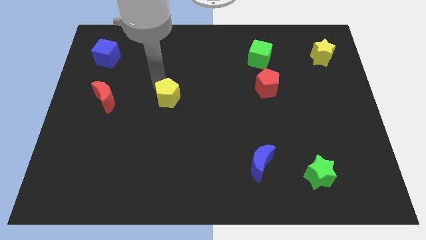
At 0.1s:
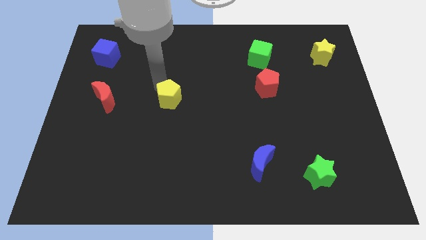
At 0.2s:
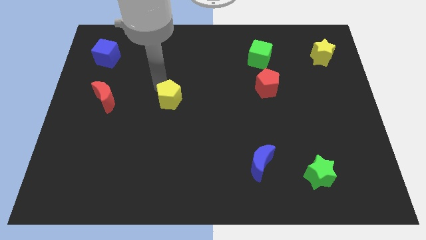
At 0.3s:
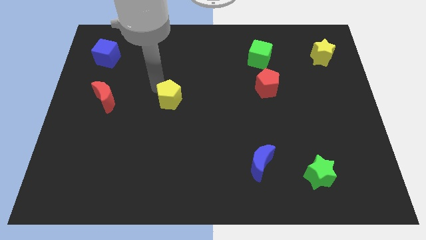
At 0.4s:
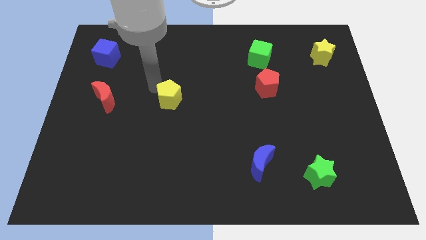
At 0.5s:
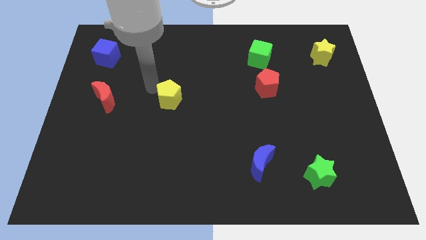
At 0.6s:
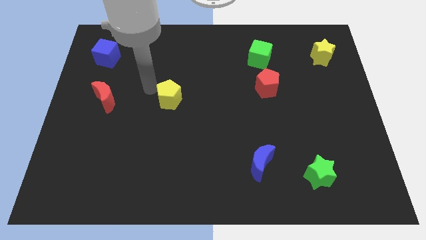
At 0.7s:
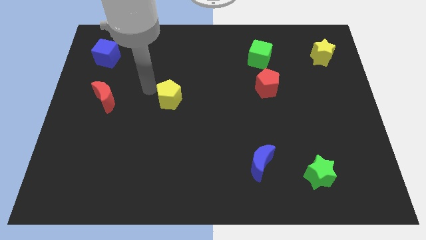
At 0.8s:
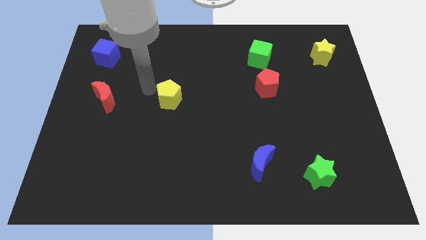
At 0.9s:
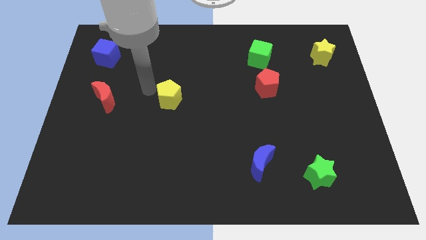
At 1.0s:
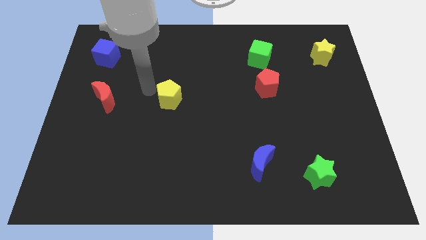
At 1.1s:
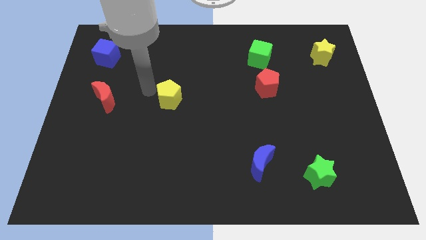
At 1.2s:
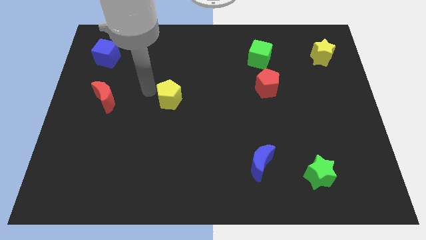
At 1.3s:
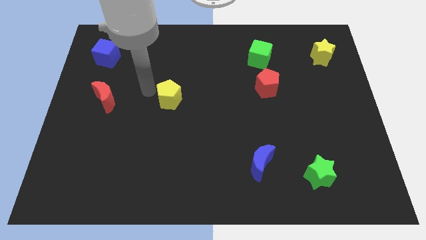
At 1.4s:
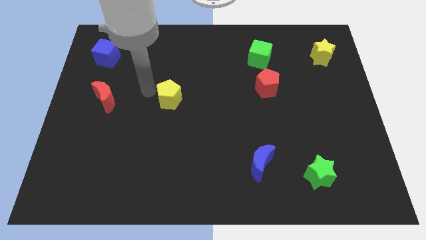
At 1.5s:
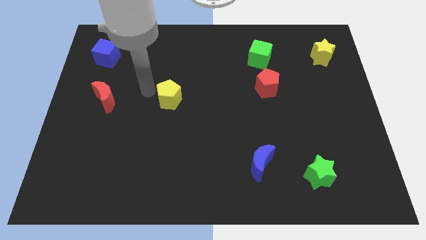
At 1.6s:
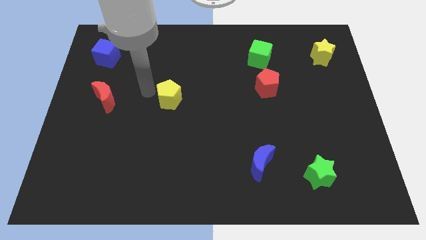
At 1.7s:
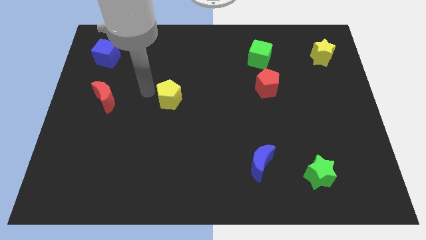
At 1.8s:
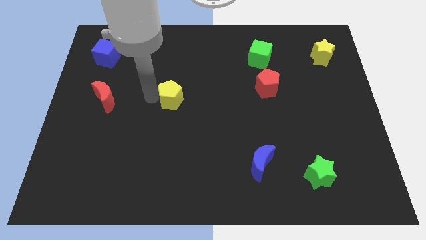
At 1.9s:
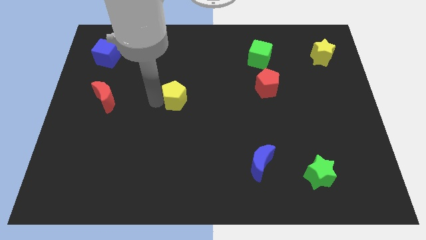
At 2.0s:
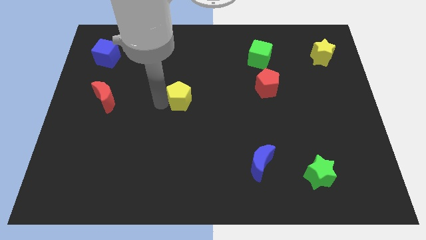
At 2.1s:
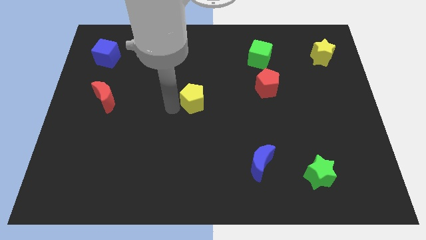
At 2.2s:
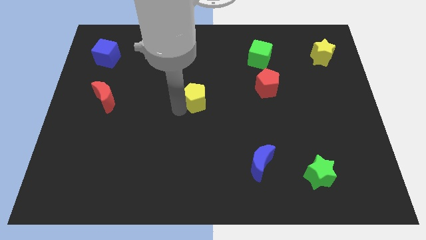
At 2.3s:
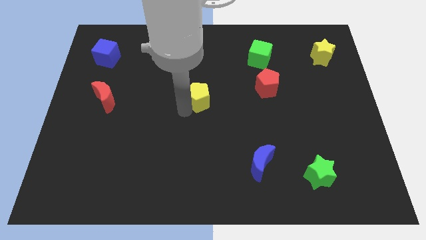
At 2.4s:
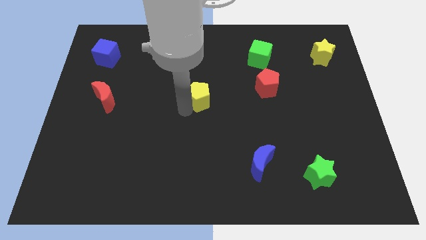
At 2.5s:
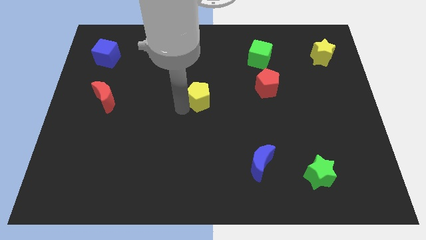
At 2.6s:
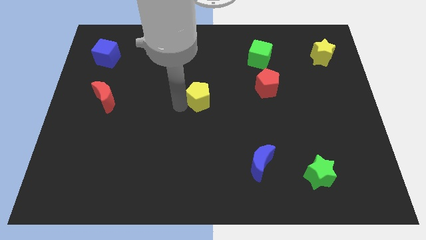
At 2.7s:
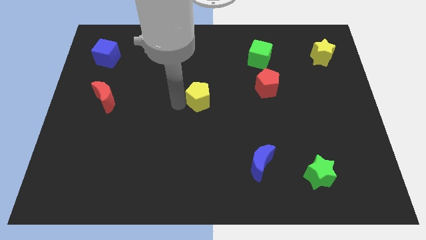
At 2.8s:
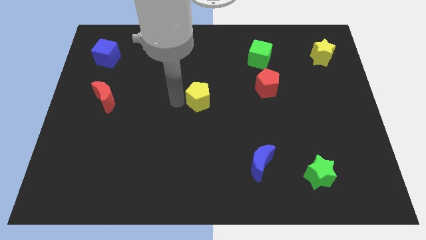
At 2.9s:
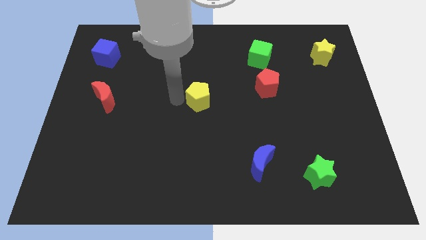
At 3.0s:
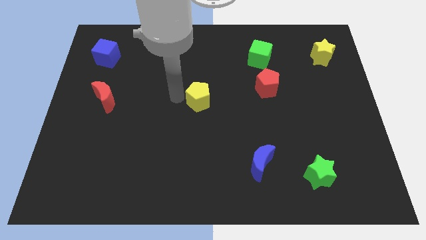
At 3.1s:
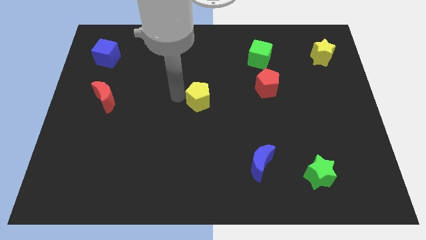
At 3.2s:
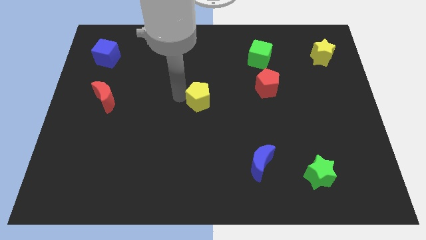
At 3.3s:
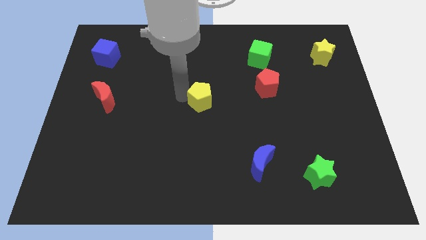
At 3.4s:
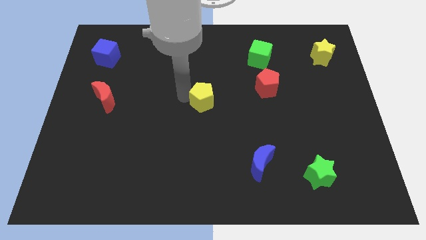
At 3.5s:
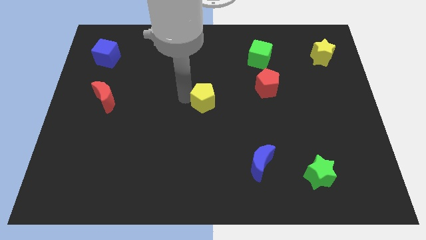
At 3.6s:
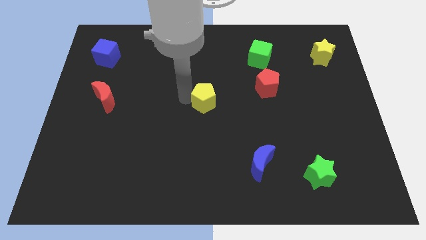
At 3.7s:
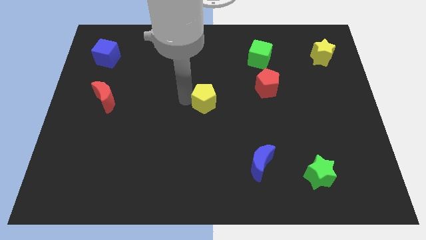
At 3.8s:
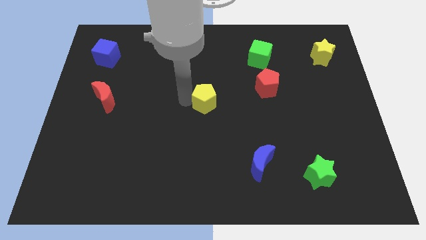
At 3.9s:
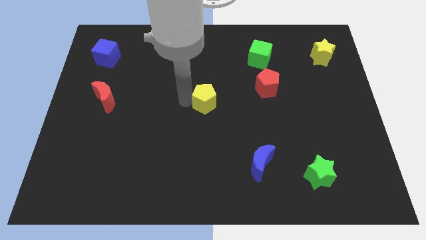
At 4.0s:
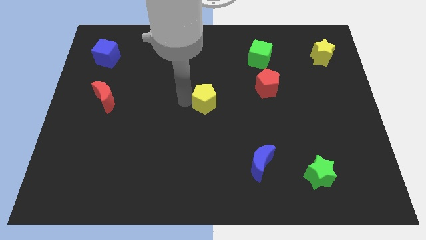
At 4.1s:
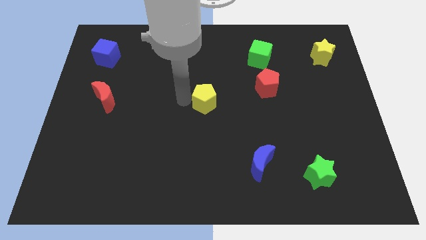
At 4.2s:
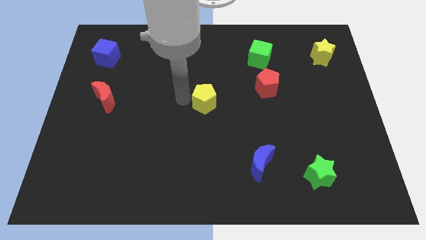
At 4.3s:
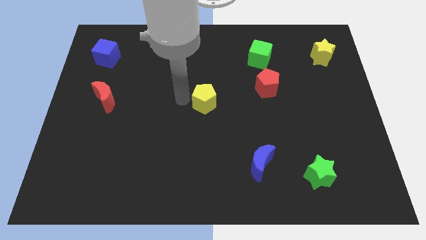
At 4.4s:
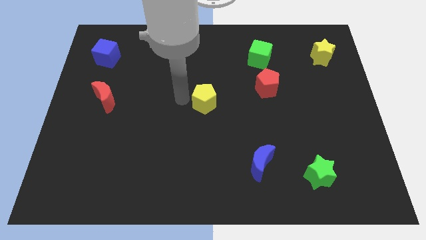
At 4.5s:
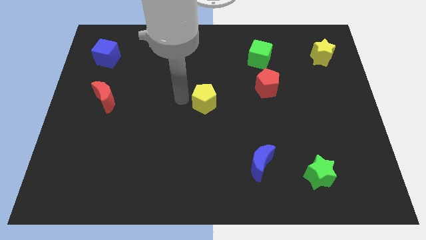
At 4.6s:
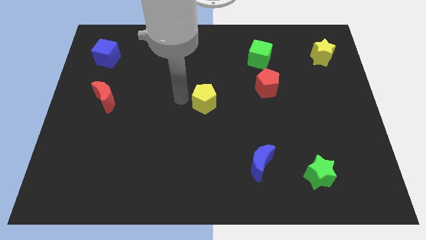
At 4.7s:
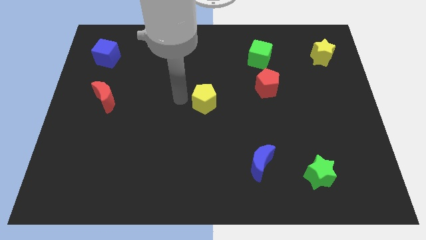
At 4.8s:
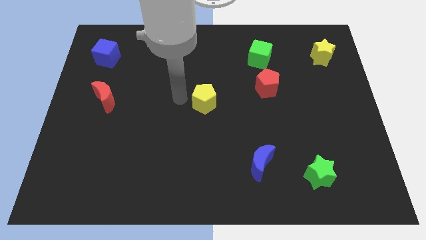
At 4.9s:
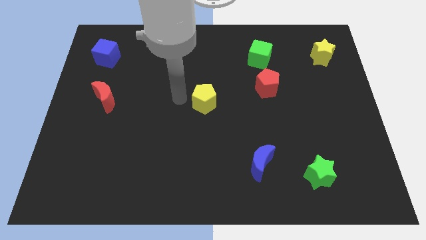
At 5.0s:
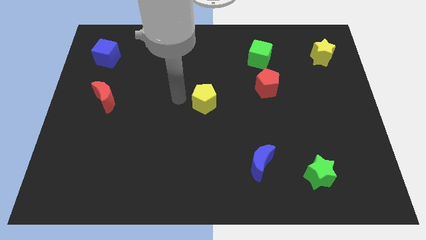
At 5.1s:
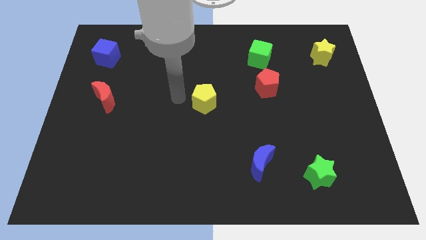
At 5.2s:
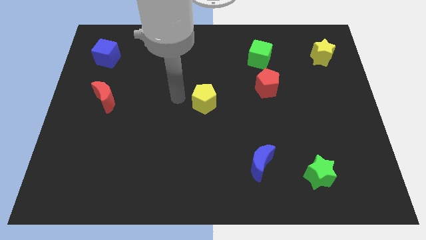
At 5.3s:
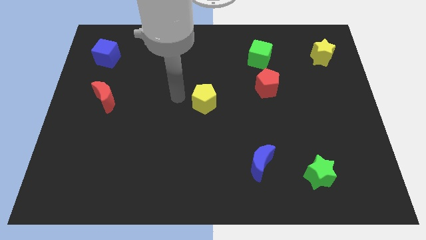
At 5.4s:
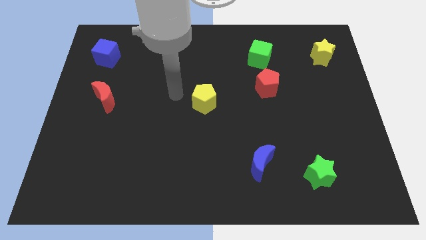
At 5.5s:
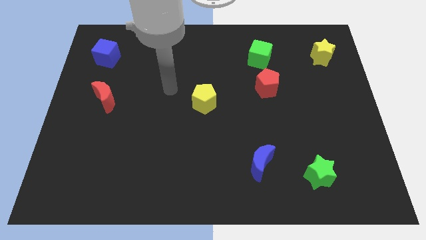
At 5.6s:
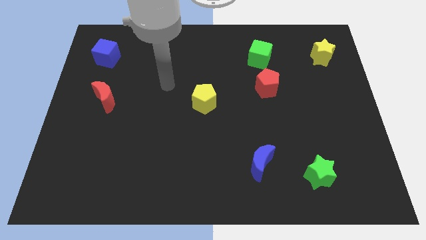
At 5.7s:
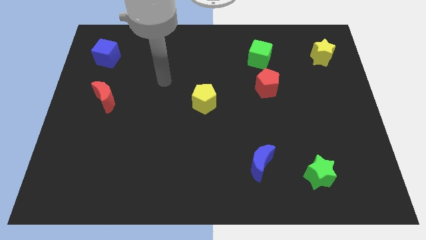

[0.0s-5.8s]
push the yellow pentagon to the center of the board

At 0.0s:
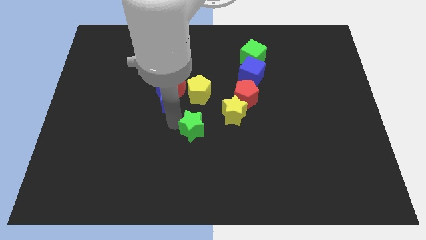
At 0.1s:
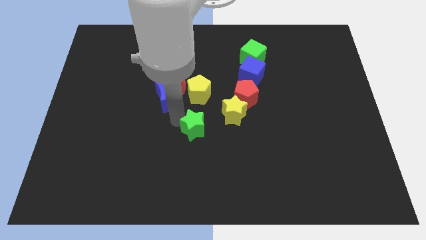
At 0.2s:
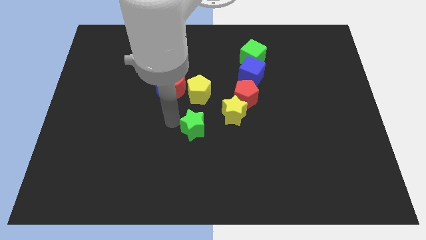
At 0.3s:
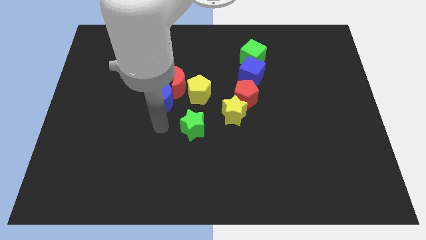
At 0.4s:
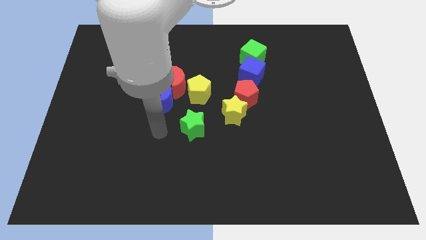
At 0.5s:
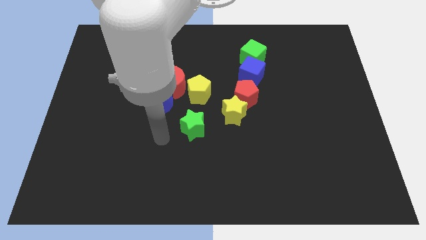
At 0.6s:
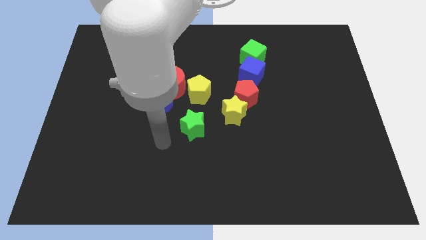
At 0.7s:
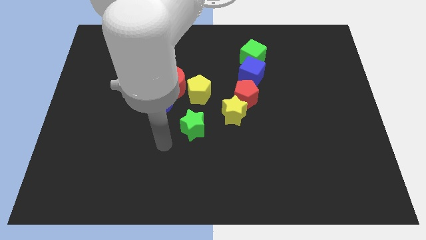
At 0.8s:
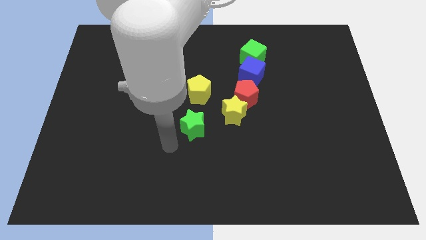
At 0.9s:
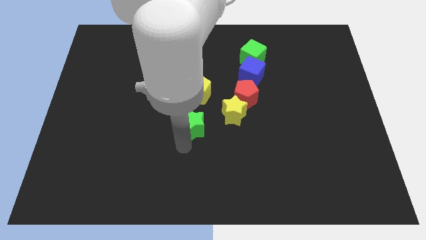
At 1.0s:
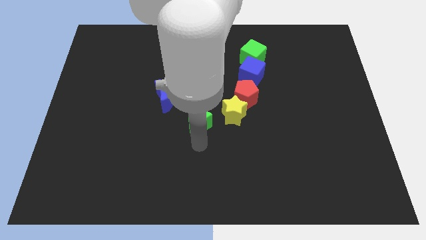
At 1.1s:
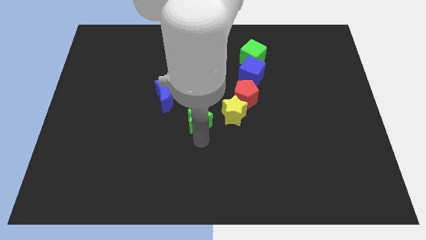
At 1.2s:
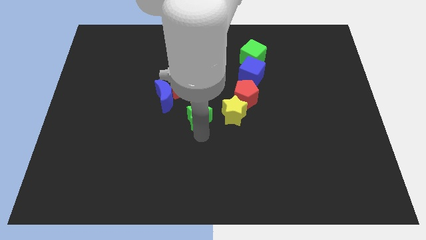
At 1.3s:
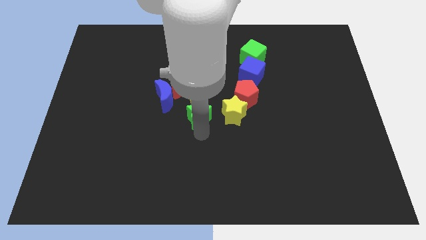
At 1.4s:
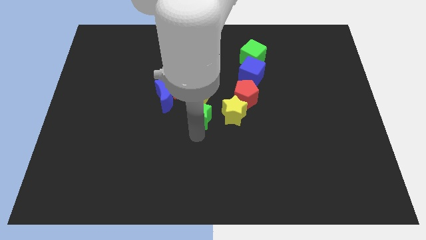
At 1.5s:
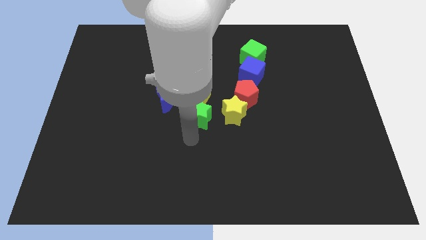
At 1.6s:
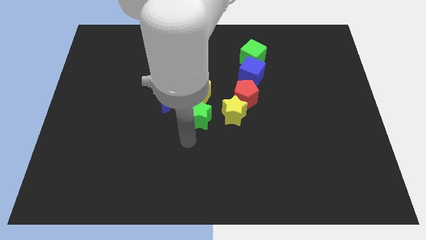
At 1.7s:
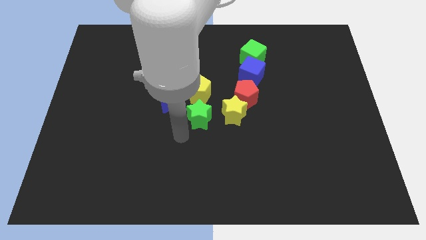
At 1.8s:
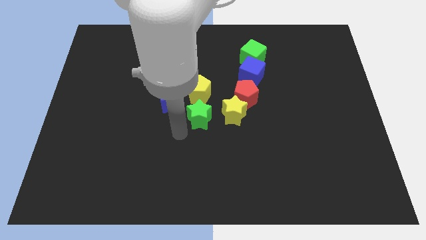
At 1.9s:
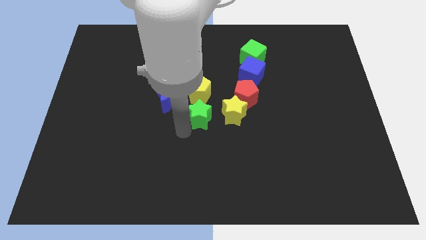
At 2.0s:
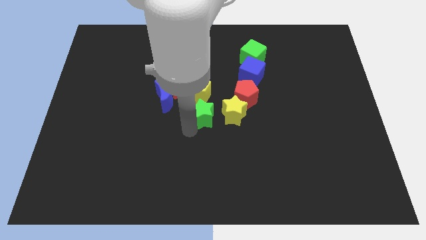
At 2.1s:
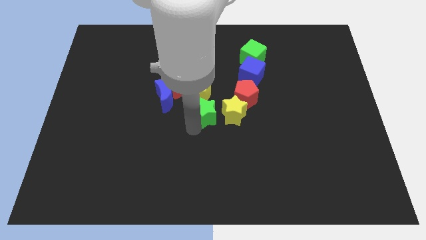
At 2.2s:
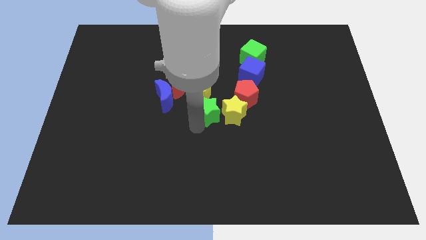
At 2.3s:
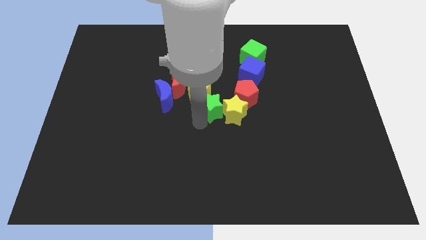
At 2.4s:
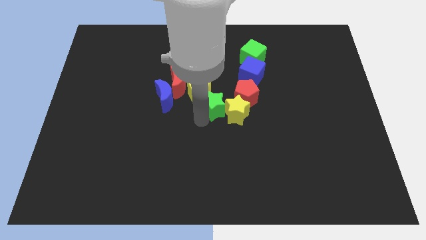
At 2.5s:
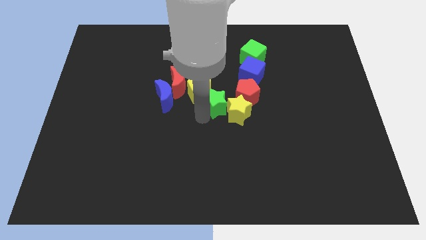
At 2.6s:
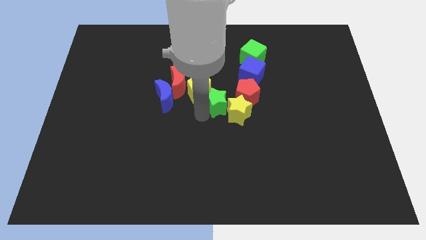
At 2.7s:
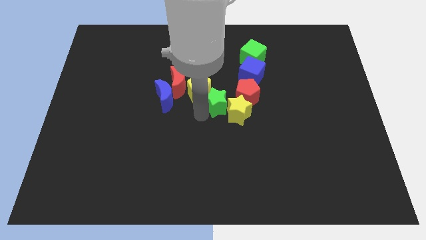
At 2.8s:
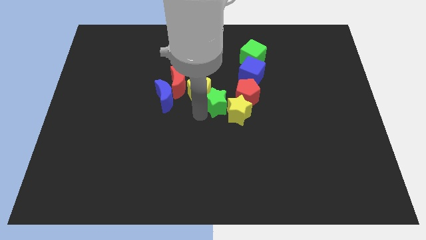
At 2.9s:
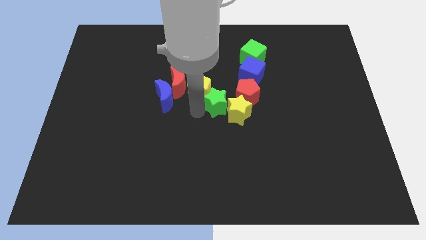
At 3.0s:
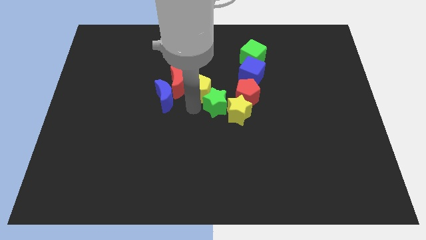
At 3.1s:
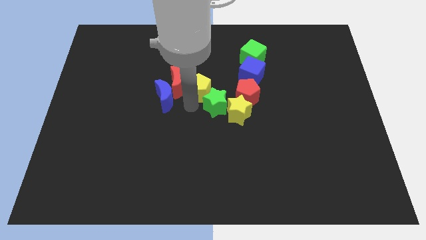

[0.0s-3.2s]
put the green star in between the yellow pentagon and yellow star
